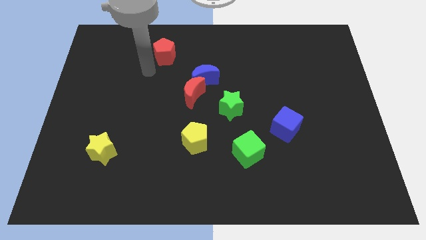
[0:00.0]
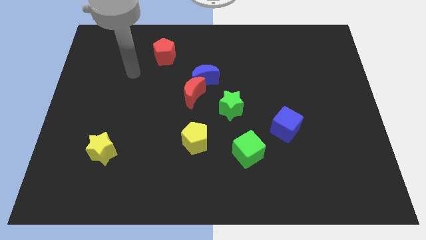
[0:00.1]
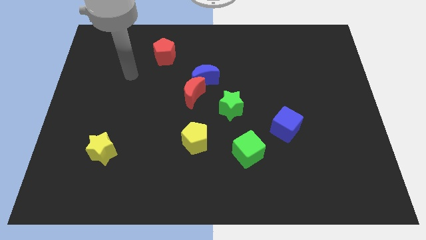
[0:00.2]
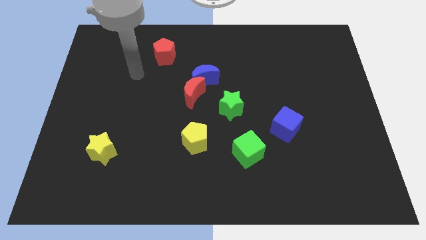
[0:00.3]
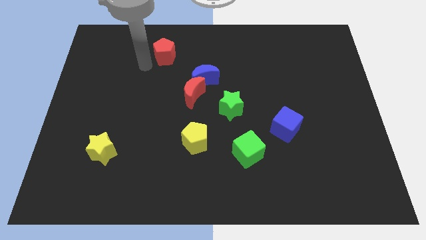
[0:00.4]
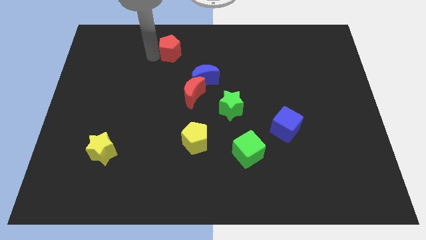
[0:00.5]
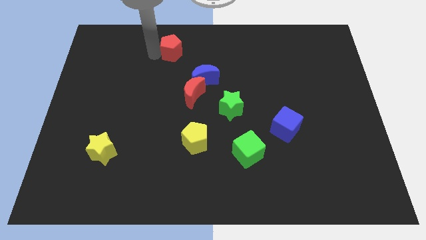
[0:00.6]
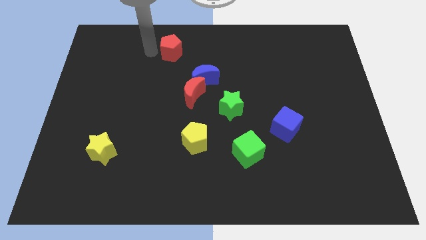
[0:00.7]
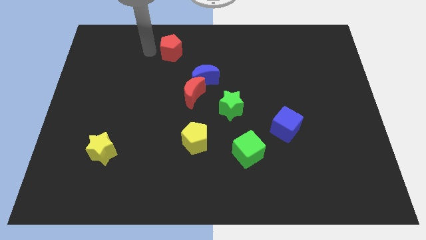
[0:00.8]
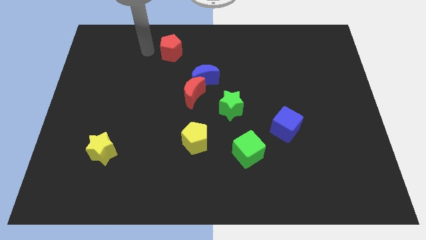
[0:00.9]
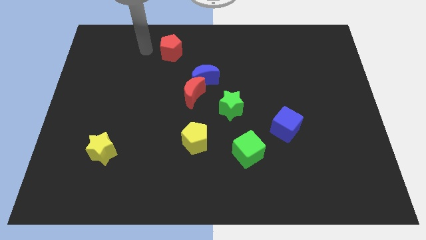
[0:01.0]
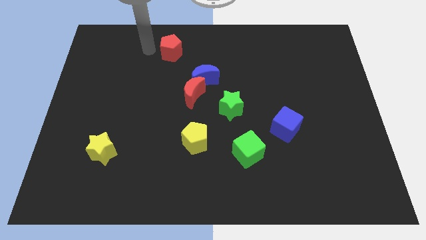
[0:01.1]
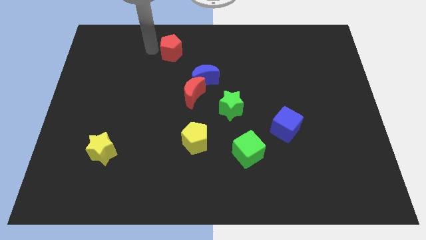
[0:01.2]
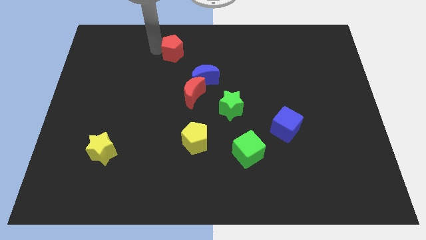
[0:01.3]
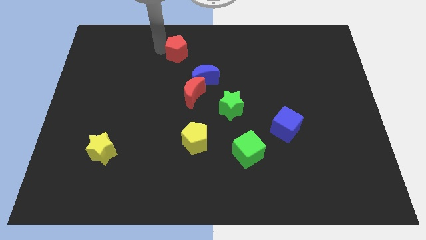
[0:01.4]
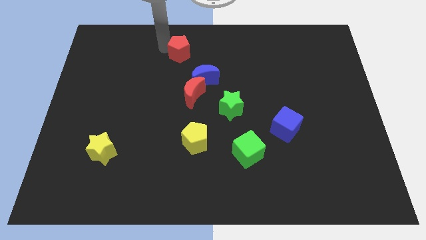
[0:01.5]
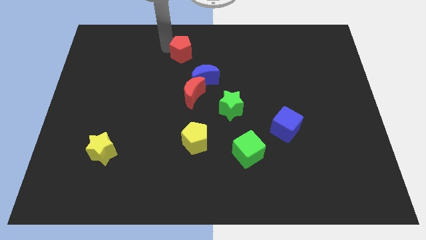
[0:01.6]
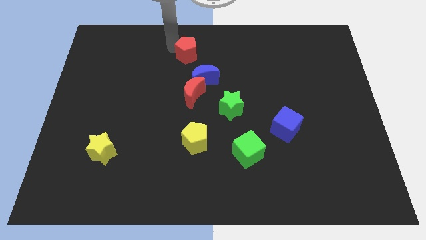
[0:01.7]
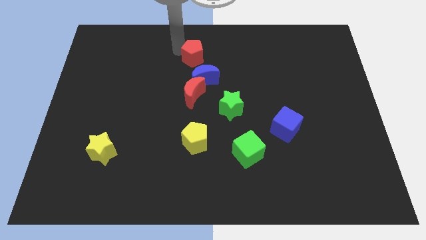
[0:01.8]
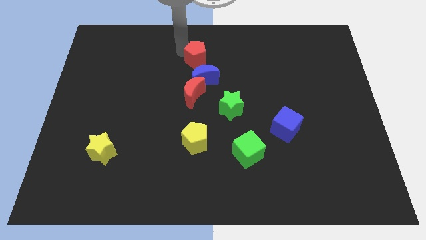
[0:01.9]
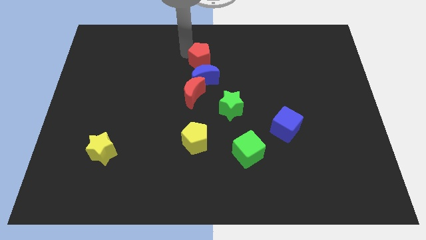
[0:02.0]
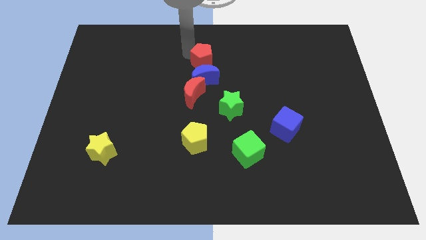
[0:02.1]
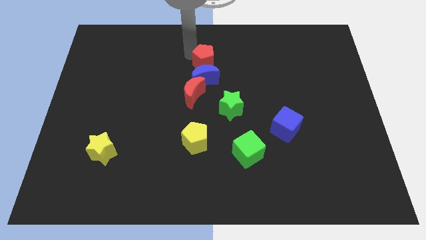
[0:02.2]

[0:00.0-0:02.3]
move red pentagon to top of the blue moon

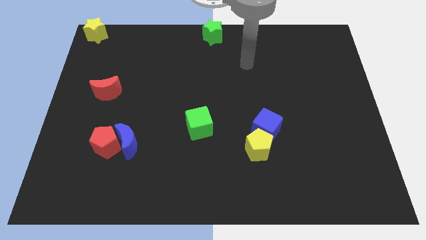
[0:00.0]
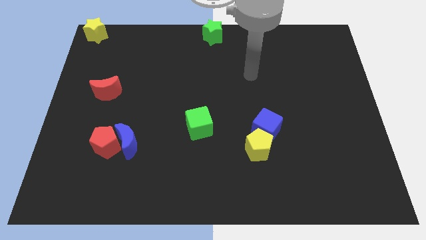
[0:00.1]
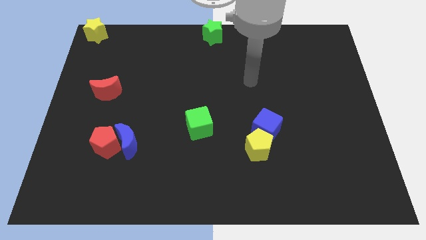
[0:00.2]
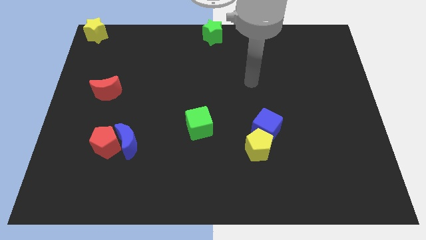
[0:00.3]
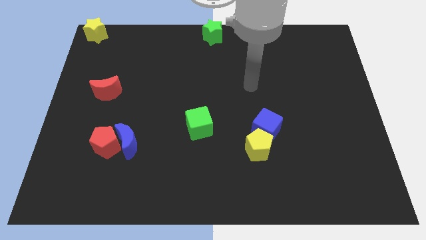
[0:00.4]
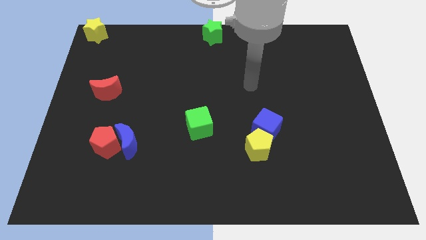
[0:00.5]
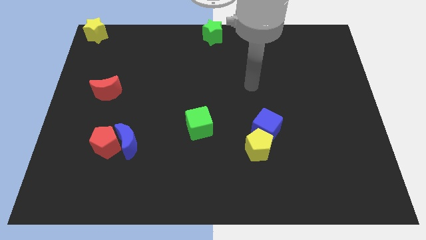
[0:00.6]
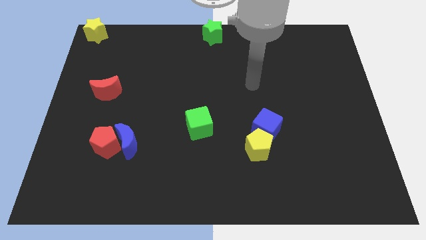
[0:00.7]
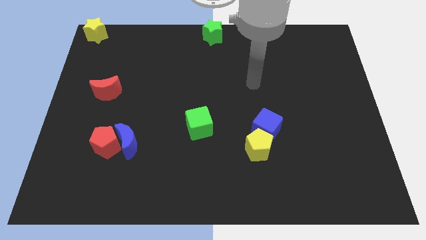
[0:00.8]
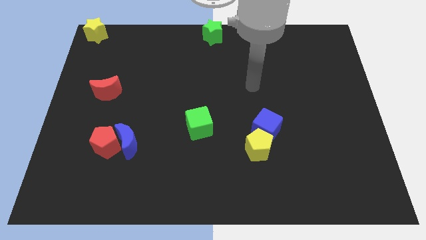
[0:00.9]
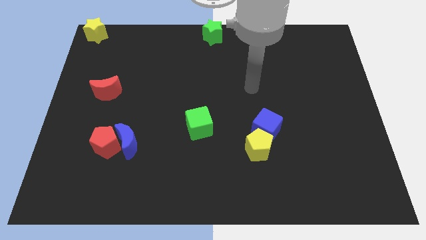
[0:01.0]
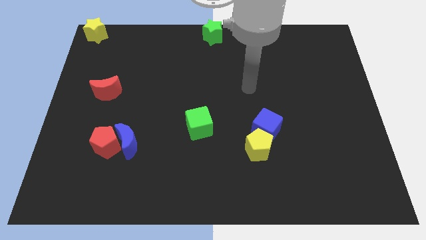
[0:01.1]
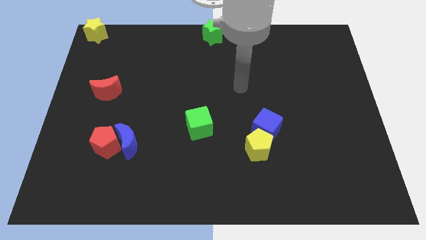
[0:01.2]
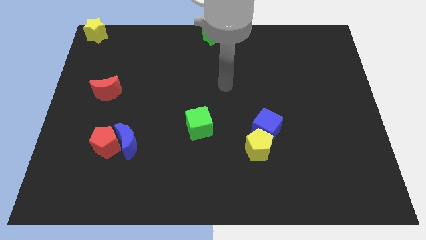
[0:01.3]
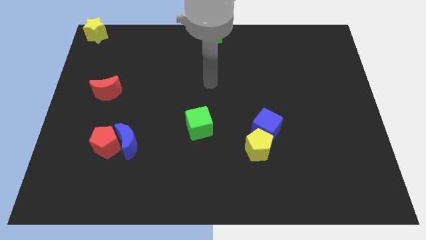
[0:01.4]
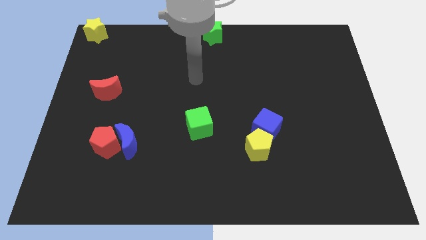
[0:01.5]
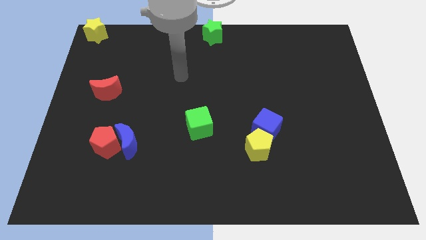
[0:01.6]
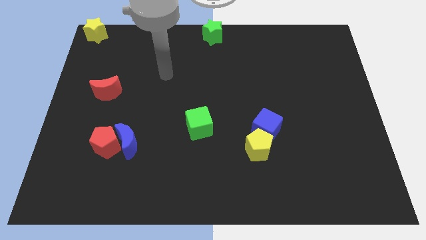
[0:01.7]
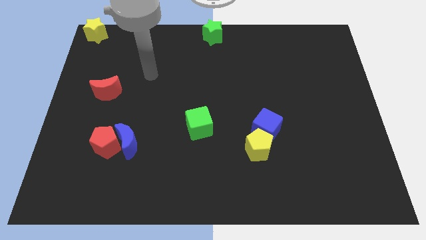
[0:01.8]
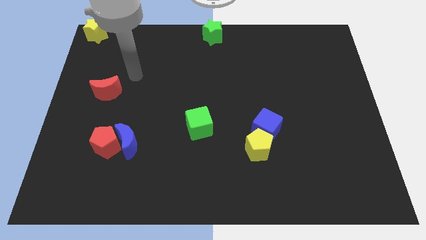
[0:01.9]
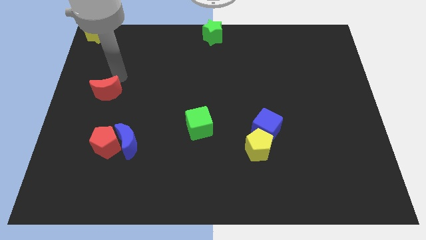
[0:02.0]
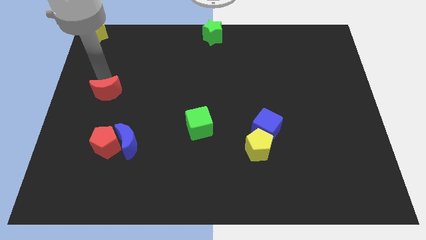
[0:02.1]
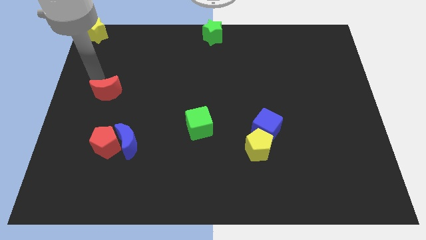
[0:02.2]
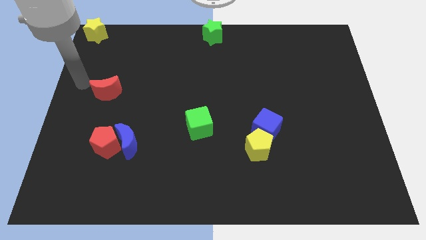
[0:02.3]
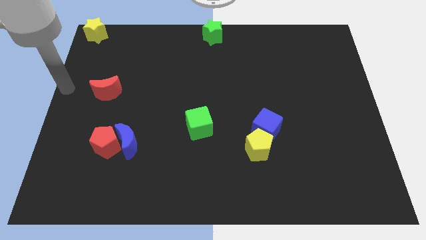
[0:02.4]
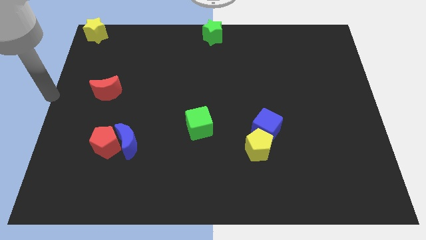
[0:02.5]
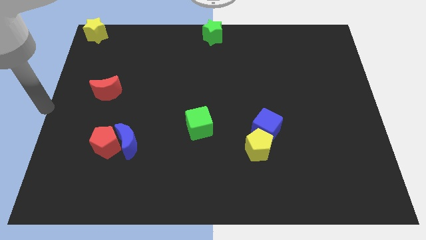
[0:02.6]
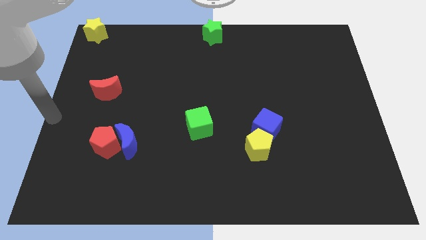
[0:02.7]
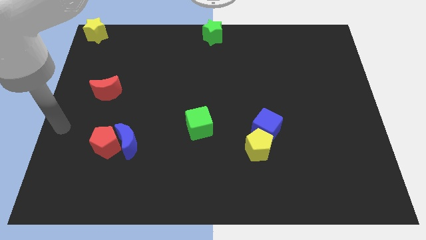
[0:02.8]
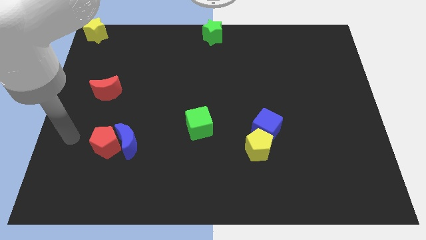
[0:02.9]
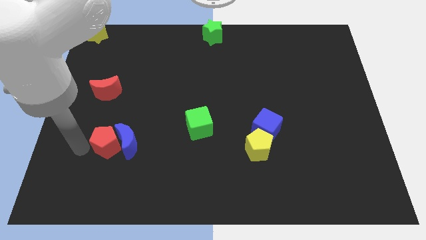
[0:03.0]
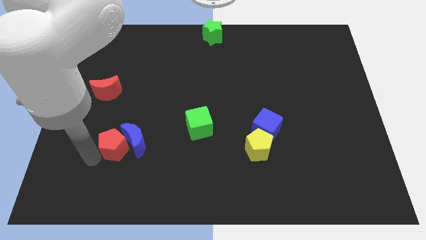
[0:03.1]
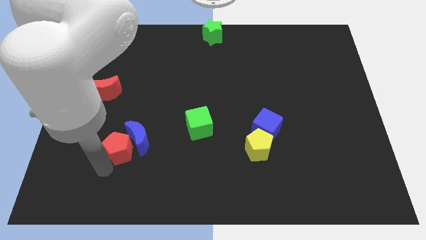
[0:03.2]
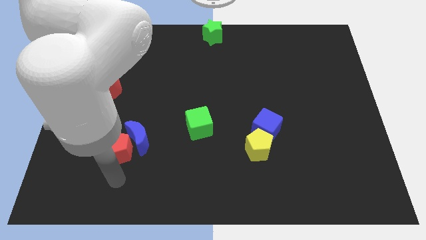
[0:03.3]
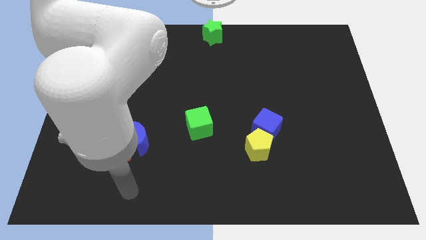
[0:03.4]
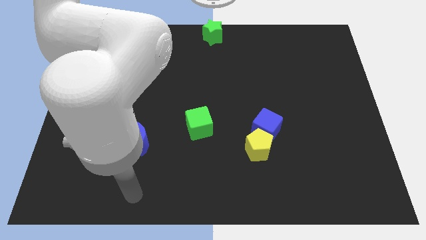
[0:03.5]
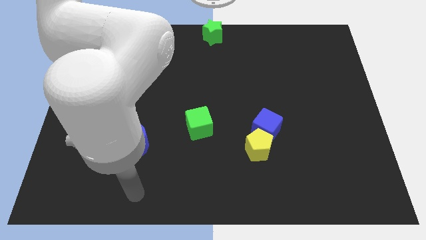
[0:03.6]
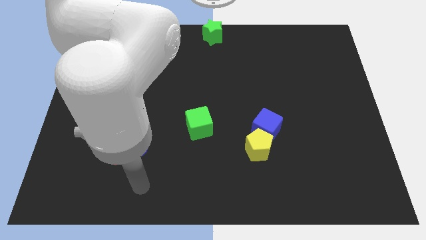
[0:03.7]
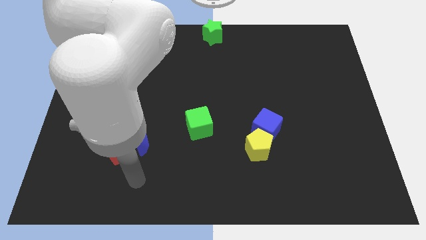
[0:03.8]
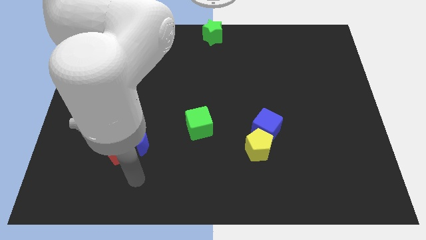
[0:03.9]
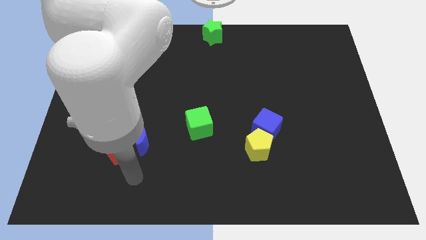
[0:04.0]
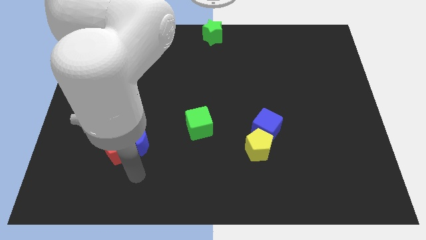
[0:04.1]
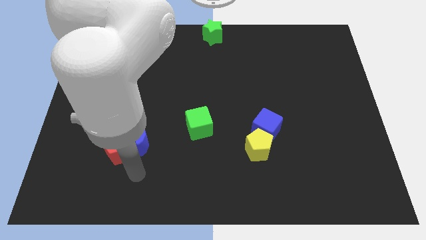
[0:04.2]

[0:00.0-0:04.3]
push the red pentagon into the blue moon

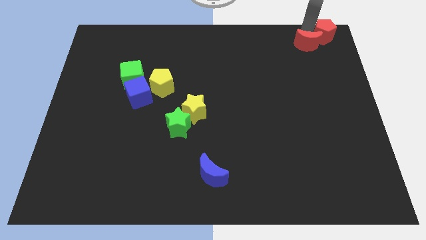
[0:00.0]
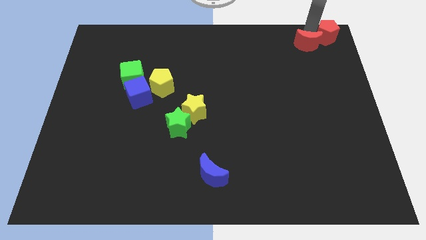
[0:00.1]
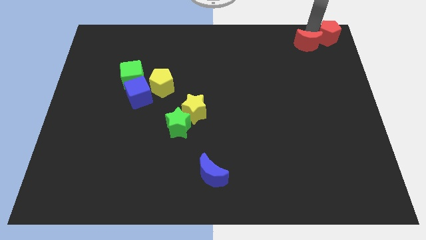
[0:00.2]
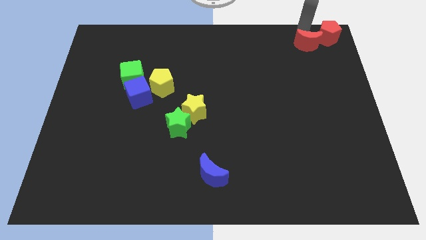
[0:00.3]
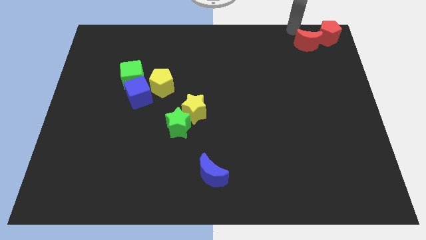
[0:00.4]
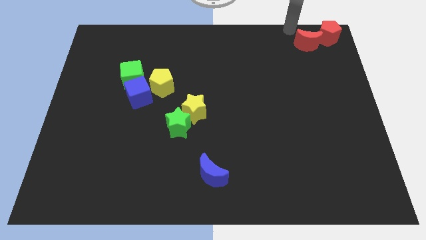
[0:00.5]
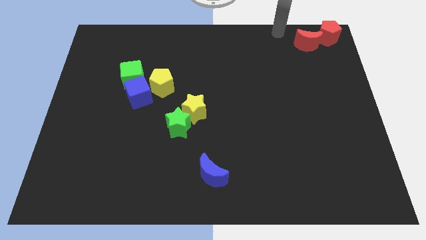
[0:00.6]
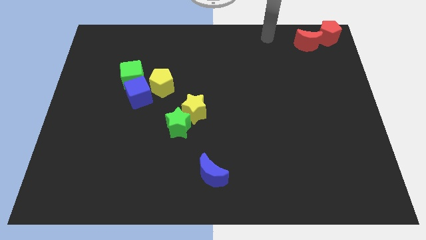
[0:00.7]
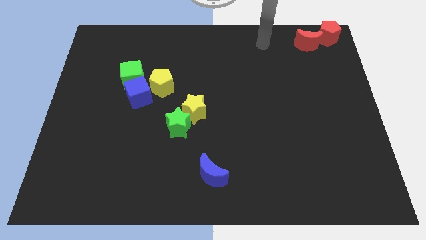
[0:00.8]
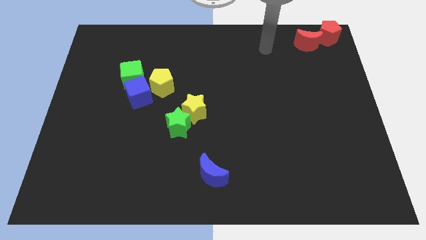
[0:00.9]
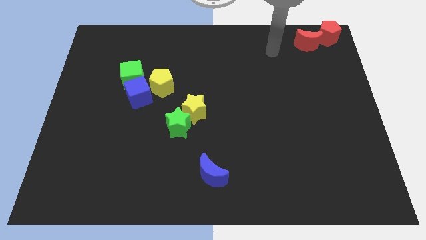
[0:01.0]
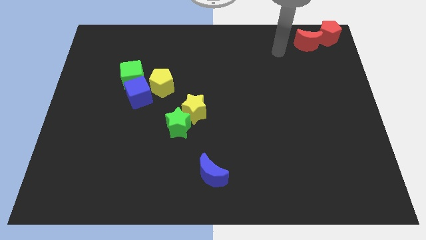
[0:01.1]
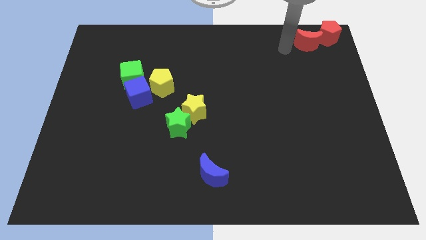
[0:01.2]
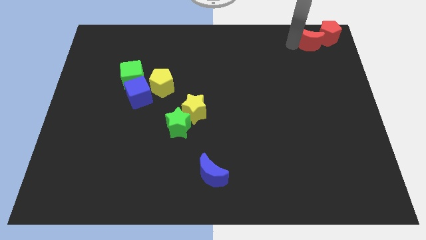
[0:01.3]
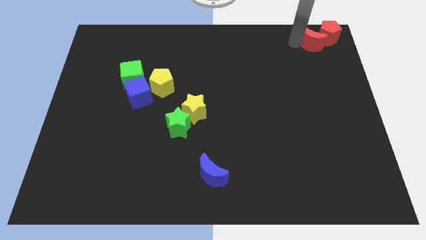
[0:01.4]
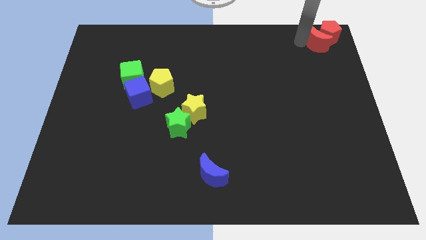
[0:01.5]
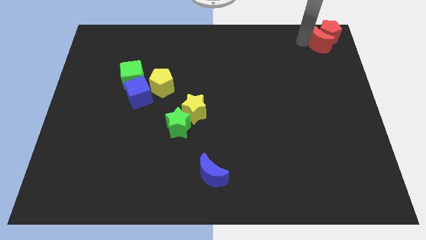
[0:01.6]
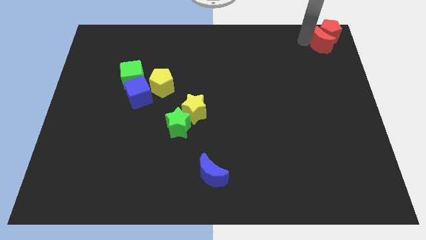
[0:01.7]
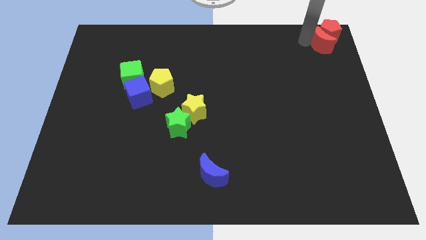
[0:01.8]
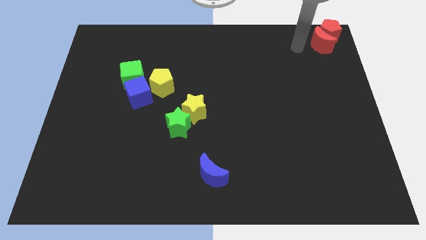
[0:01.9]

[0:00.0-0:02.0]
put the red blocks at the top right of the board

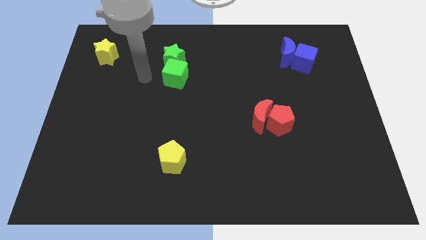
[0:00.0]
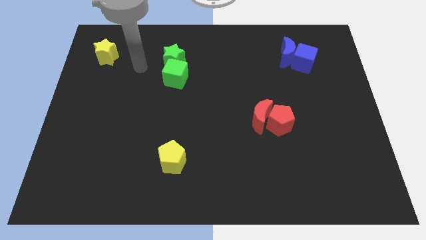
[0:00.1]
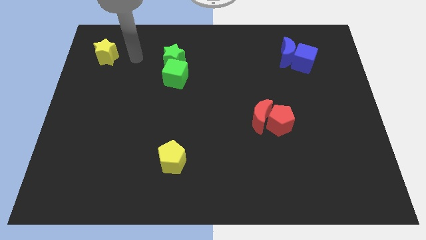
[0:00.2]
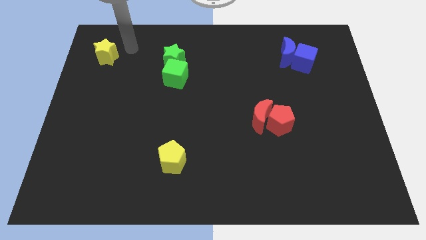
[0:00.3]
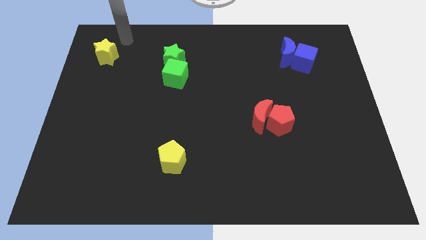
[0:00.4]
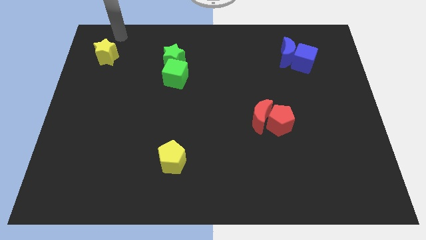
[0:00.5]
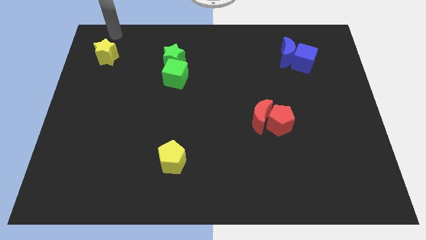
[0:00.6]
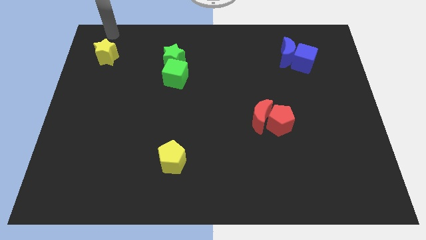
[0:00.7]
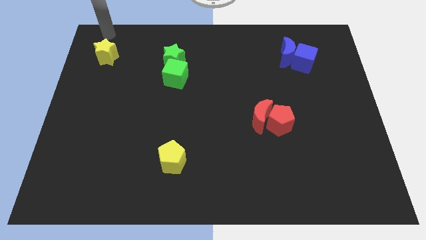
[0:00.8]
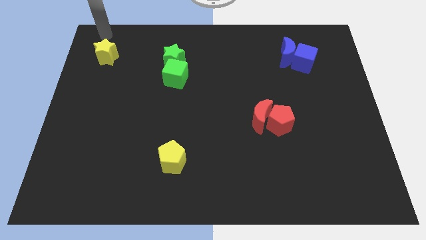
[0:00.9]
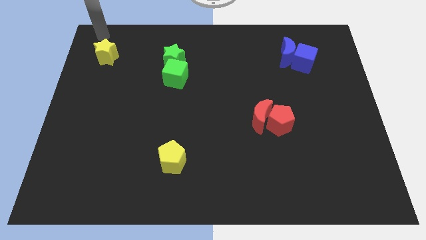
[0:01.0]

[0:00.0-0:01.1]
move the arm to the yellow star
